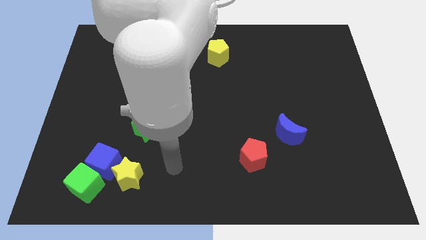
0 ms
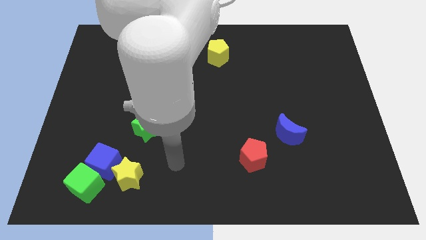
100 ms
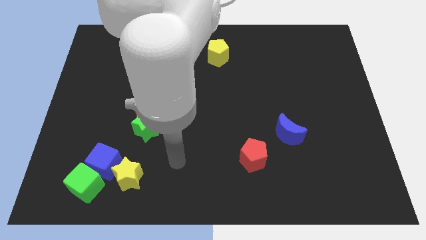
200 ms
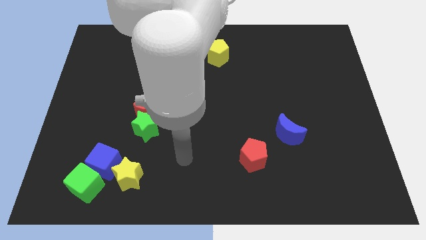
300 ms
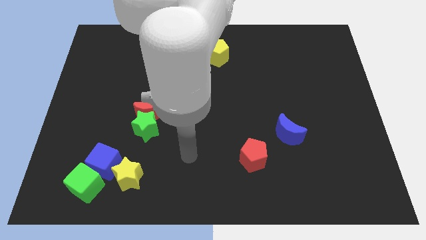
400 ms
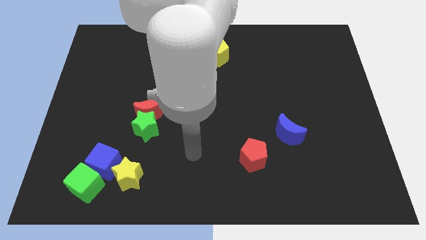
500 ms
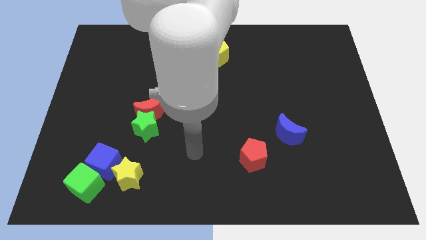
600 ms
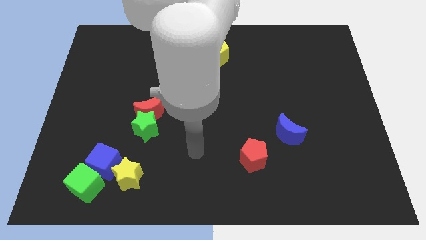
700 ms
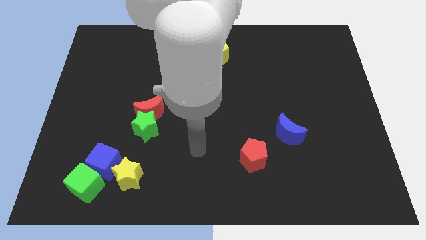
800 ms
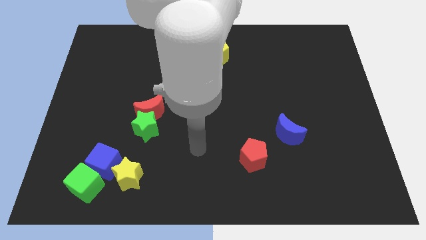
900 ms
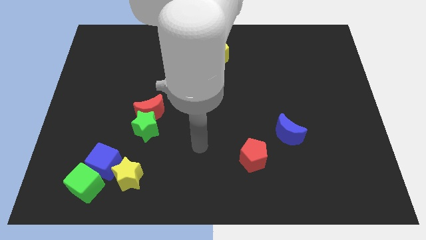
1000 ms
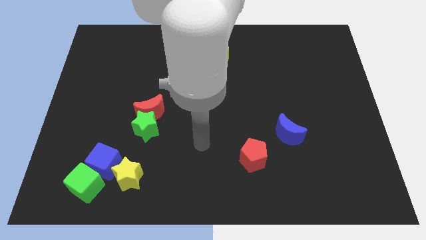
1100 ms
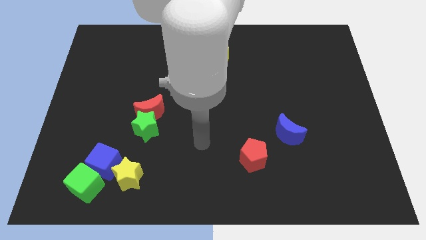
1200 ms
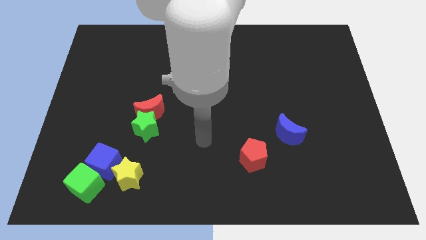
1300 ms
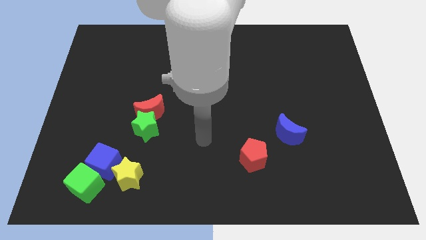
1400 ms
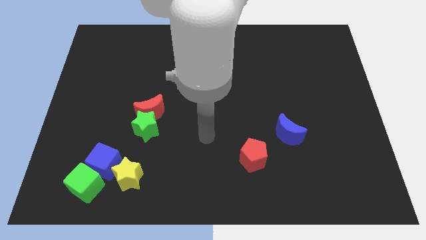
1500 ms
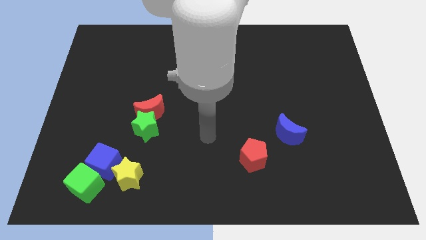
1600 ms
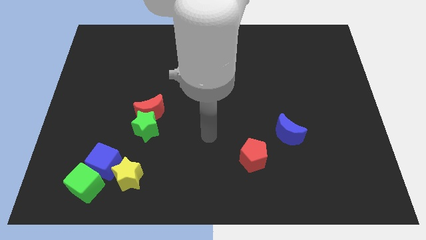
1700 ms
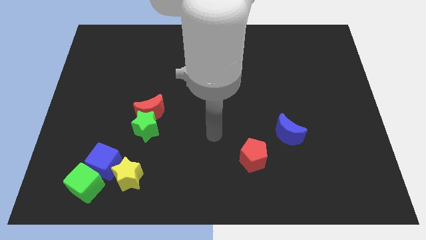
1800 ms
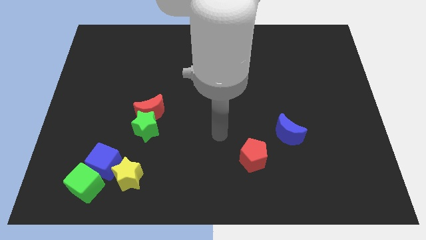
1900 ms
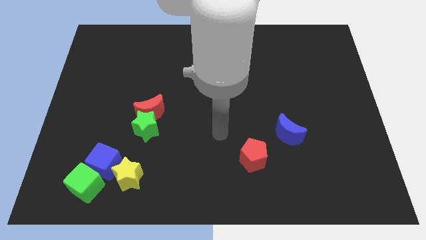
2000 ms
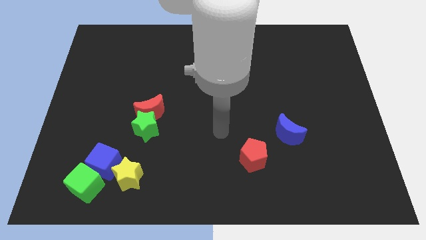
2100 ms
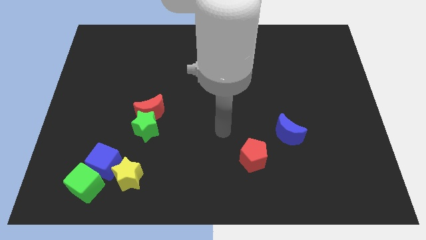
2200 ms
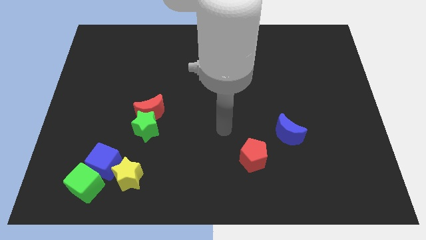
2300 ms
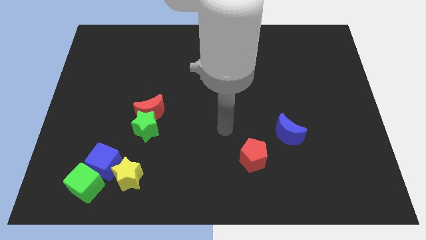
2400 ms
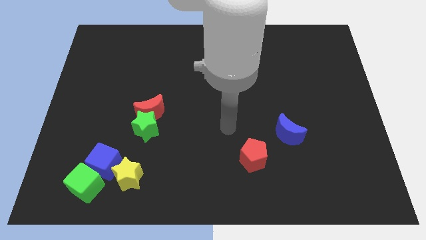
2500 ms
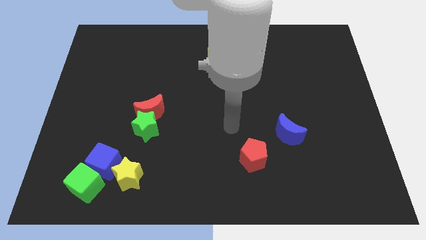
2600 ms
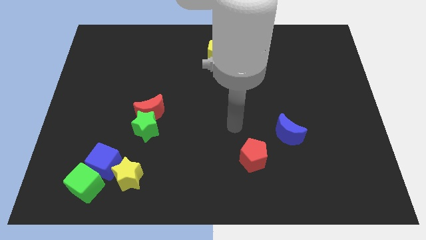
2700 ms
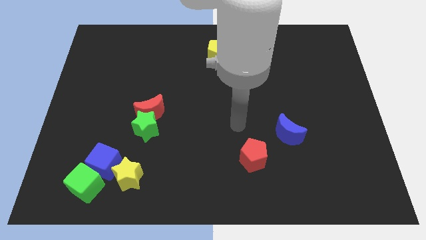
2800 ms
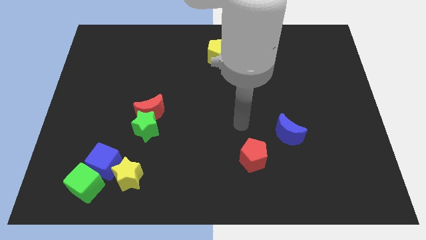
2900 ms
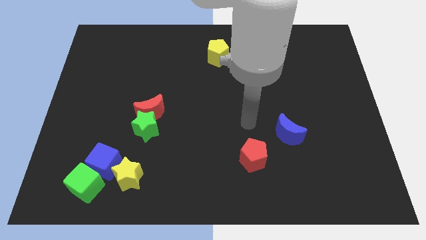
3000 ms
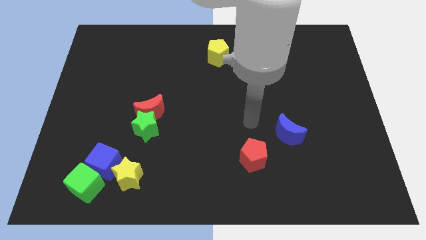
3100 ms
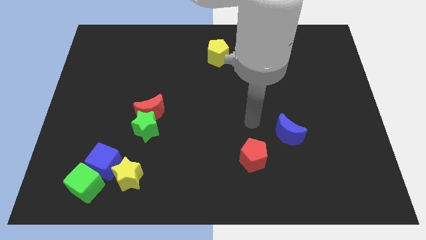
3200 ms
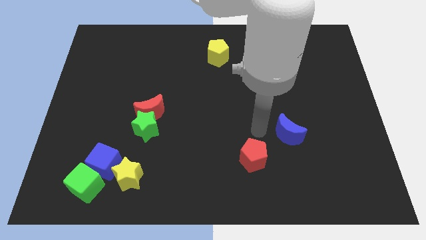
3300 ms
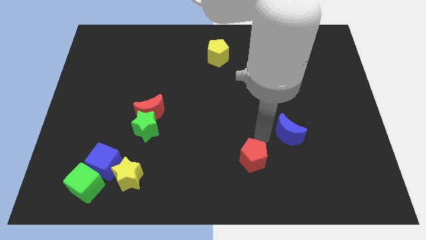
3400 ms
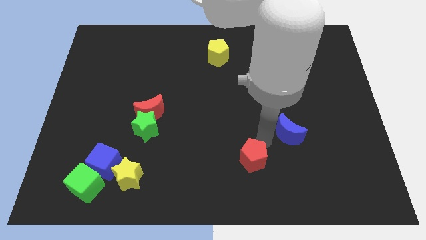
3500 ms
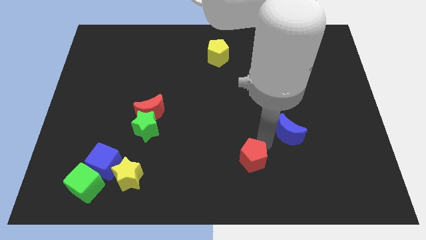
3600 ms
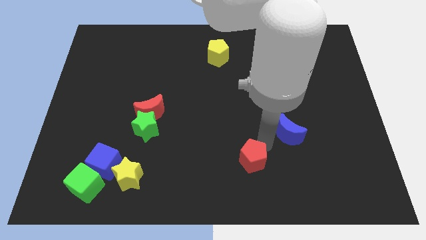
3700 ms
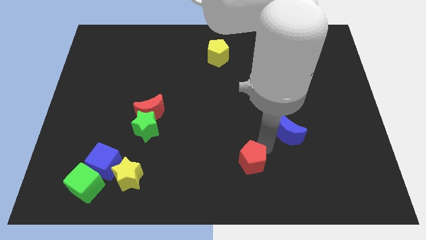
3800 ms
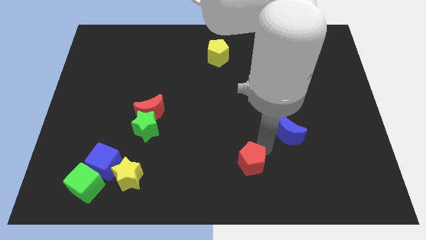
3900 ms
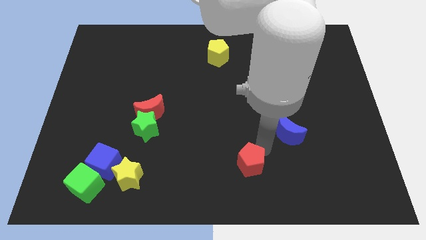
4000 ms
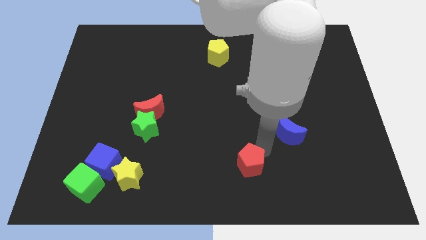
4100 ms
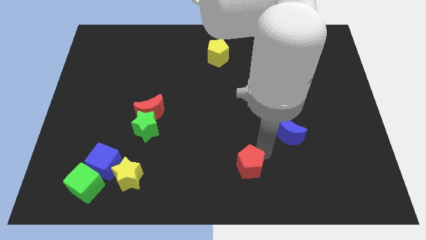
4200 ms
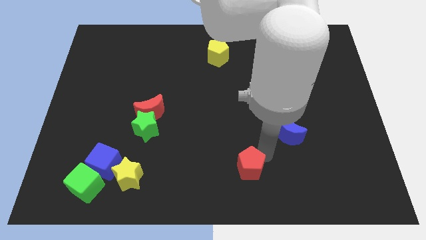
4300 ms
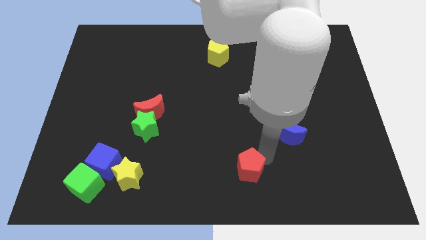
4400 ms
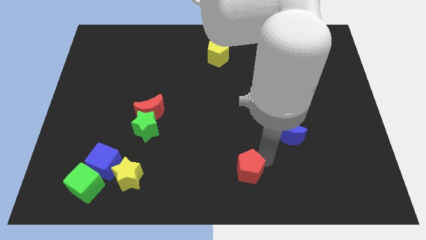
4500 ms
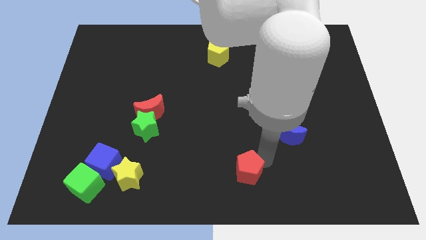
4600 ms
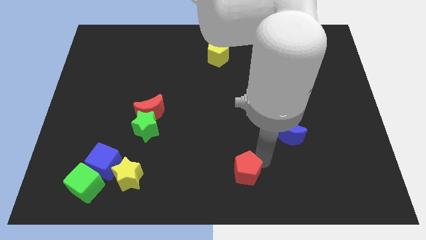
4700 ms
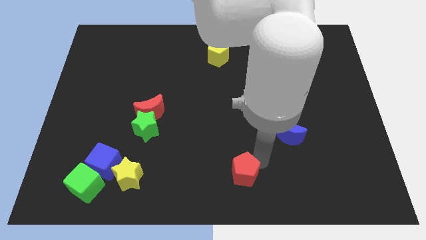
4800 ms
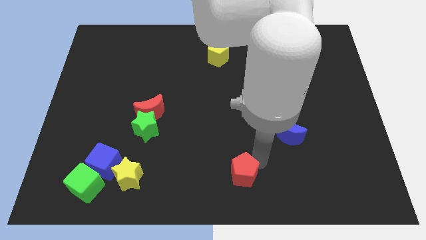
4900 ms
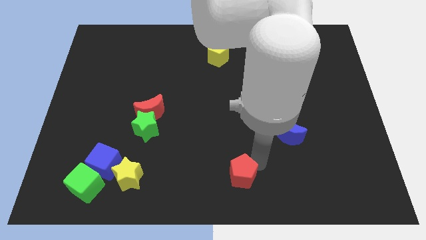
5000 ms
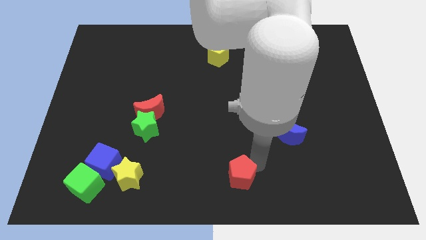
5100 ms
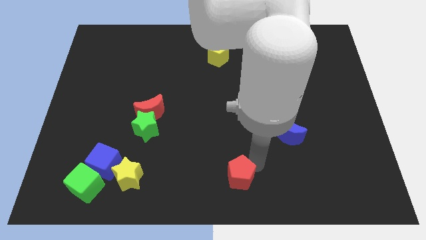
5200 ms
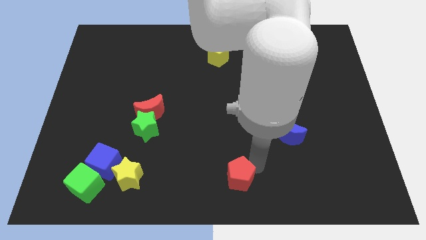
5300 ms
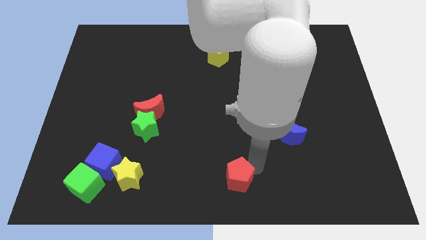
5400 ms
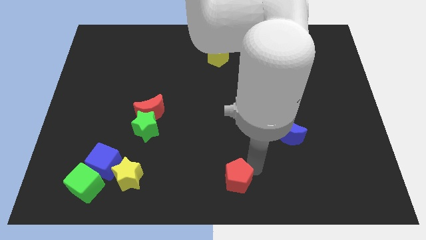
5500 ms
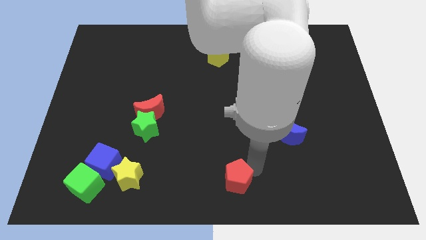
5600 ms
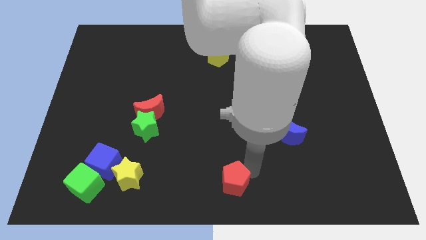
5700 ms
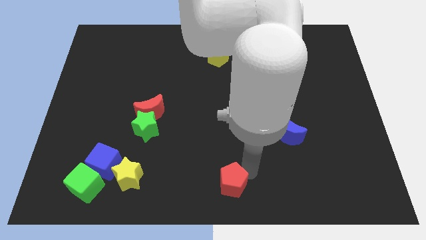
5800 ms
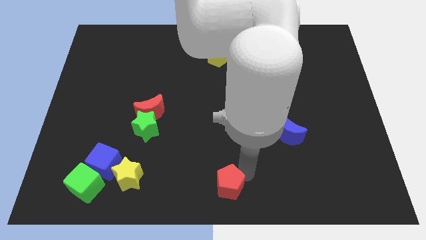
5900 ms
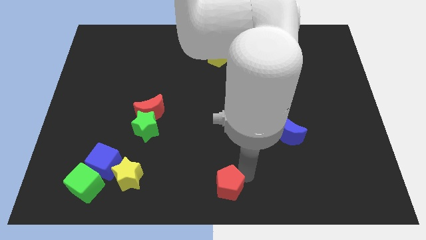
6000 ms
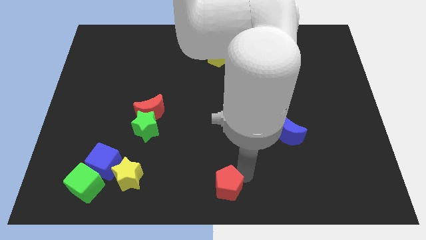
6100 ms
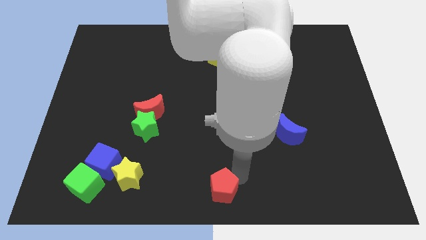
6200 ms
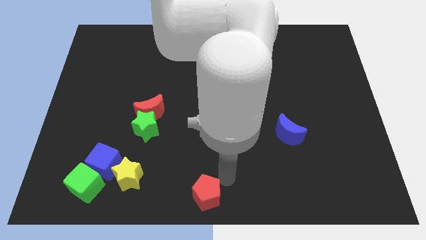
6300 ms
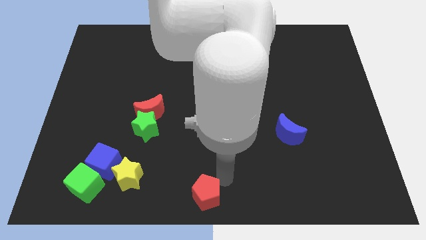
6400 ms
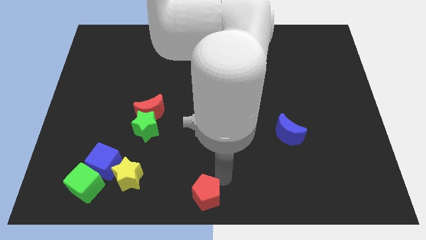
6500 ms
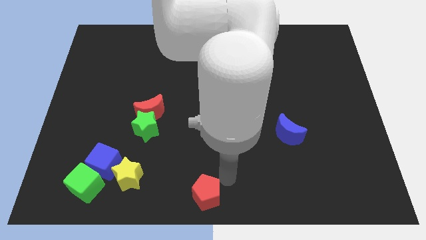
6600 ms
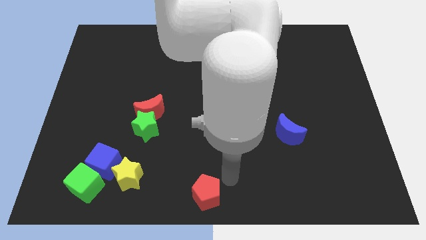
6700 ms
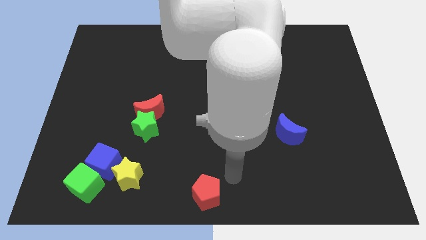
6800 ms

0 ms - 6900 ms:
move the red pentagon to the center bottom

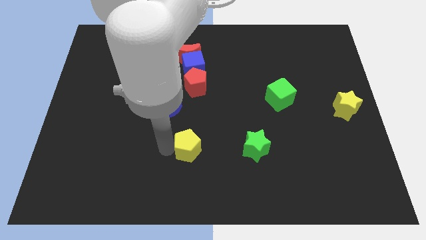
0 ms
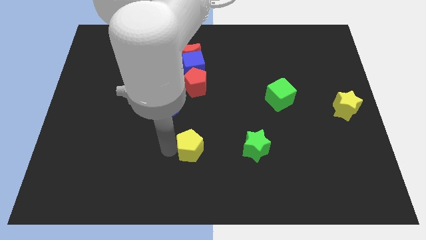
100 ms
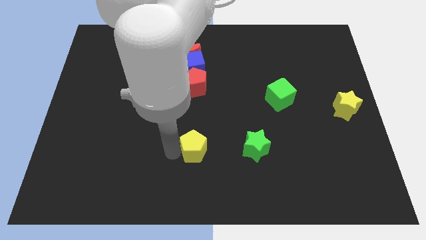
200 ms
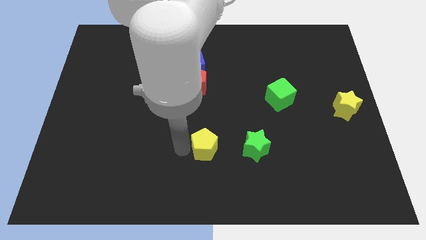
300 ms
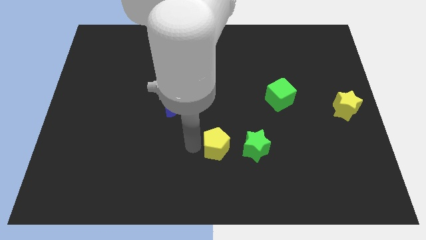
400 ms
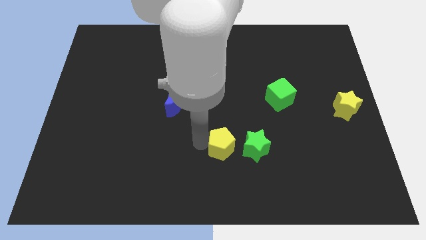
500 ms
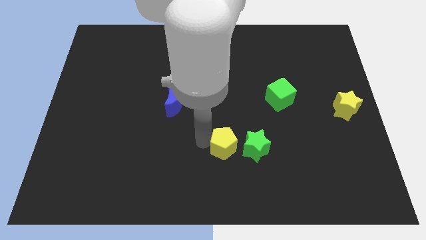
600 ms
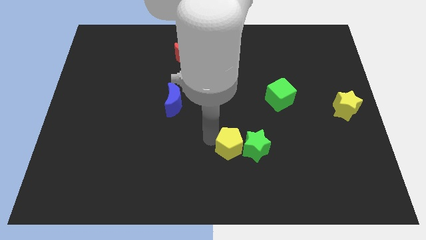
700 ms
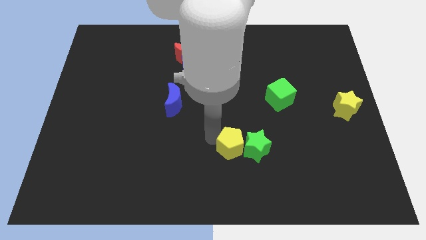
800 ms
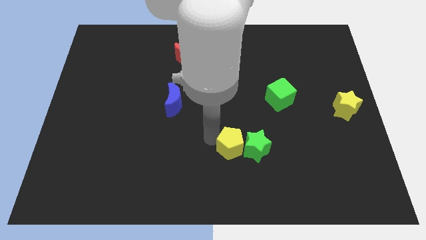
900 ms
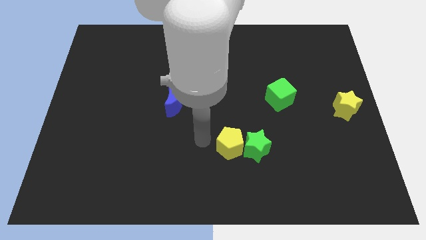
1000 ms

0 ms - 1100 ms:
move the yellow pentagon to the left of the green star

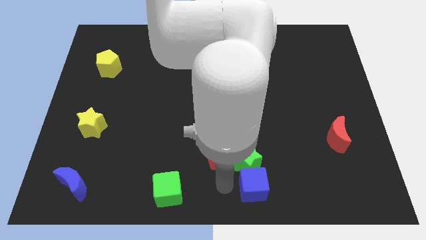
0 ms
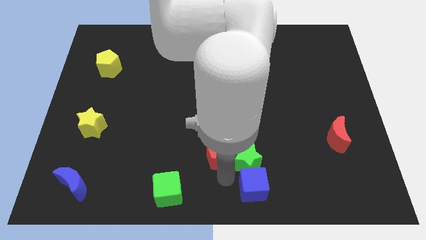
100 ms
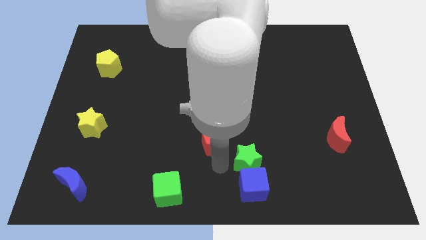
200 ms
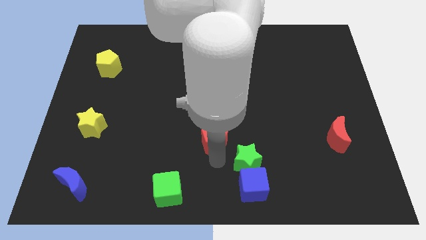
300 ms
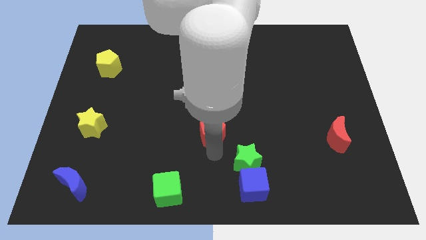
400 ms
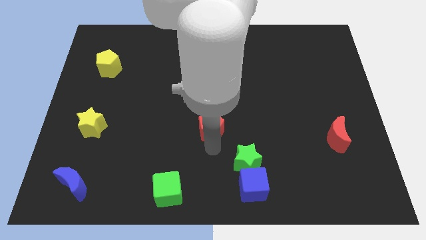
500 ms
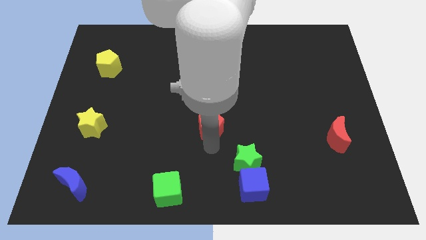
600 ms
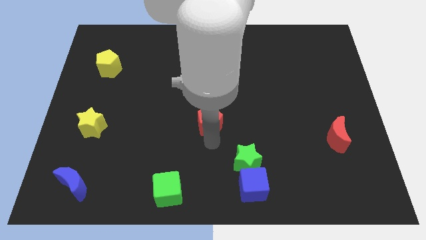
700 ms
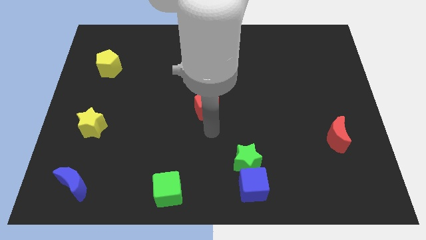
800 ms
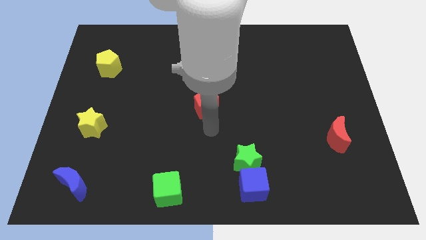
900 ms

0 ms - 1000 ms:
separate the red pentagon from the green star
